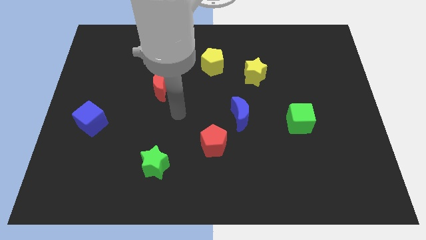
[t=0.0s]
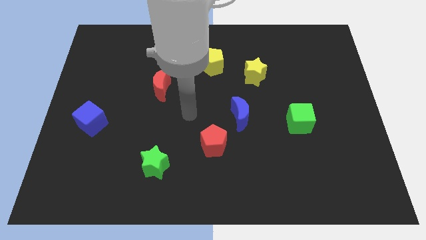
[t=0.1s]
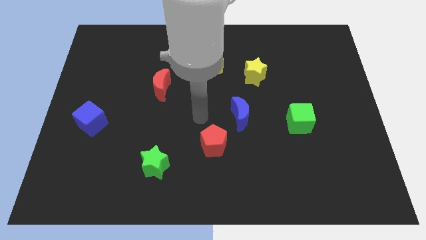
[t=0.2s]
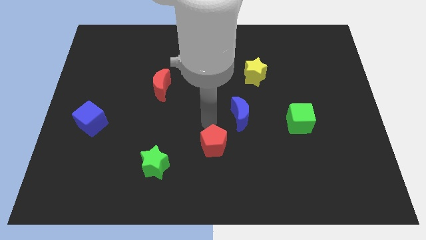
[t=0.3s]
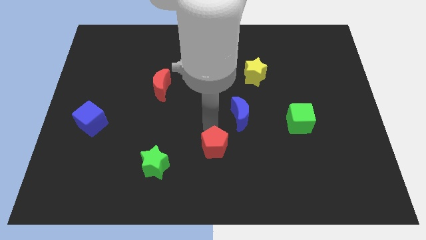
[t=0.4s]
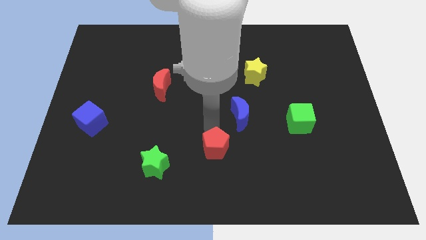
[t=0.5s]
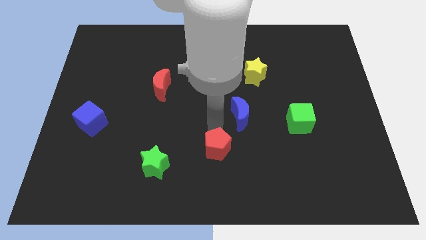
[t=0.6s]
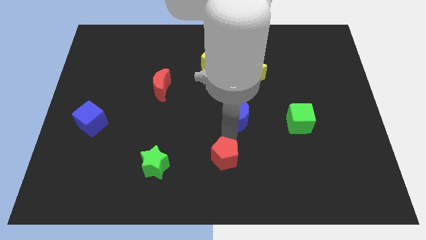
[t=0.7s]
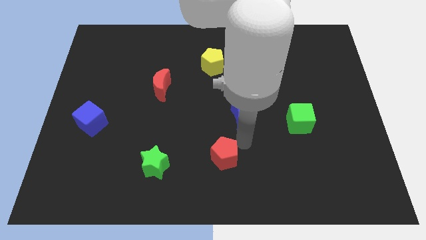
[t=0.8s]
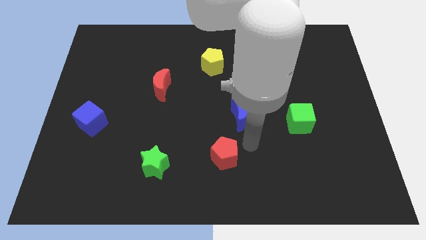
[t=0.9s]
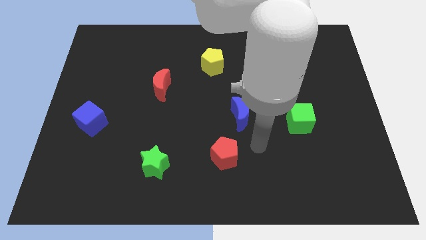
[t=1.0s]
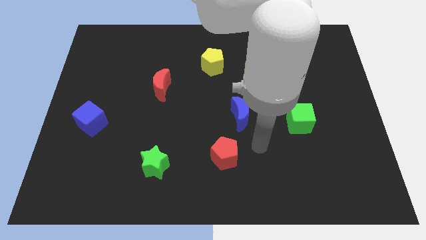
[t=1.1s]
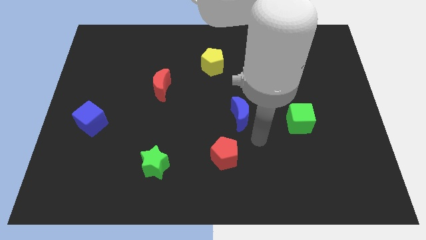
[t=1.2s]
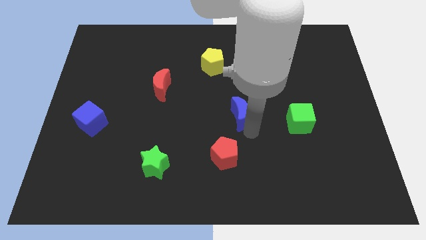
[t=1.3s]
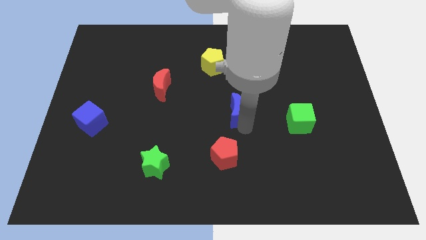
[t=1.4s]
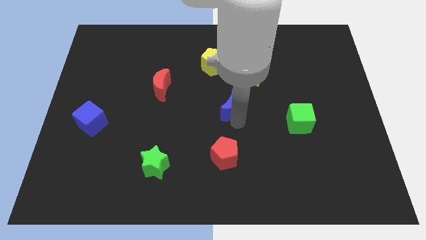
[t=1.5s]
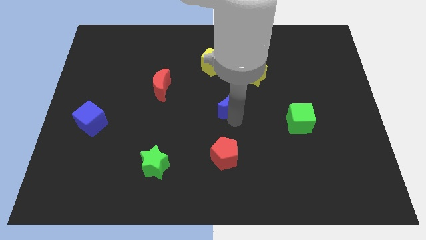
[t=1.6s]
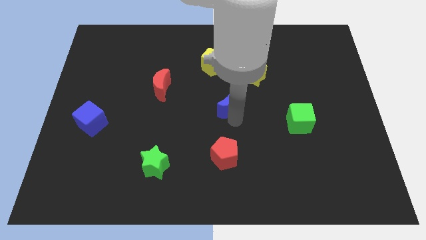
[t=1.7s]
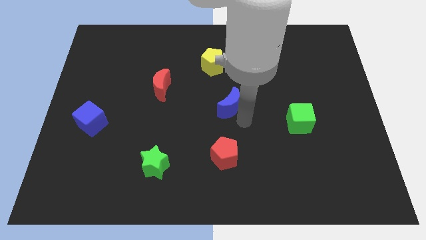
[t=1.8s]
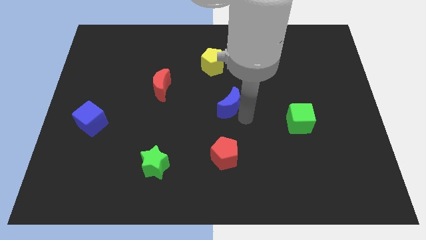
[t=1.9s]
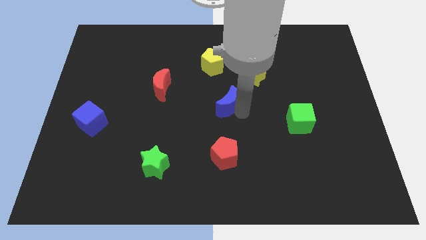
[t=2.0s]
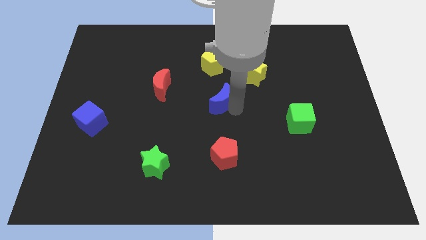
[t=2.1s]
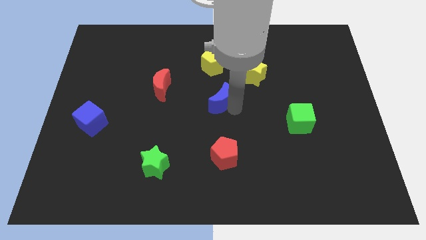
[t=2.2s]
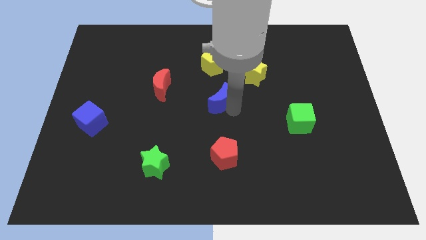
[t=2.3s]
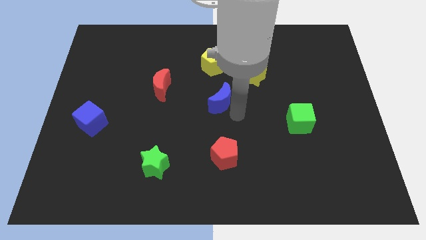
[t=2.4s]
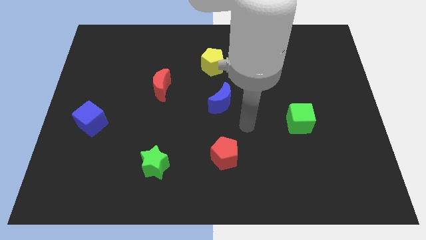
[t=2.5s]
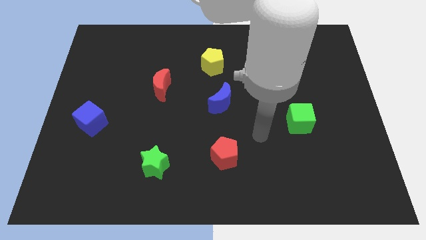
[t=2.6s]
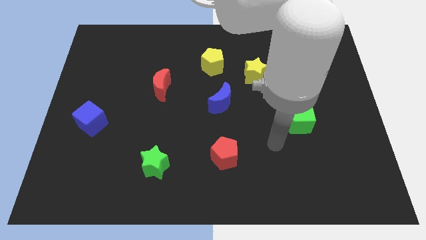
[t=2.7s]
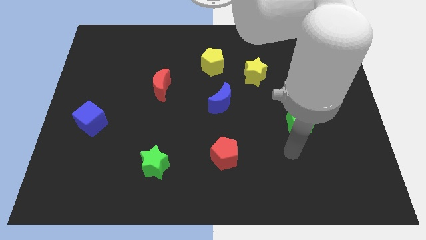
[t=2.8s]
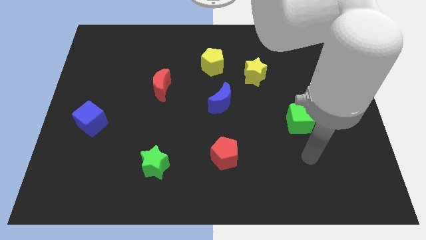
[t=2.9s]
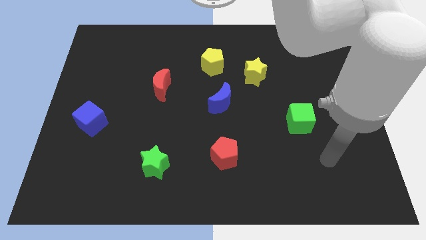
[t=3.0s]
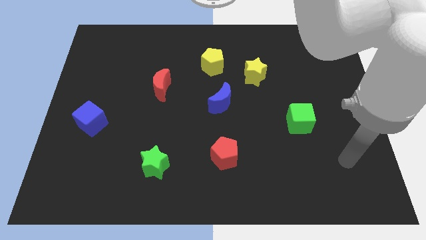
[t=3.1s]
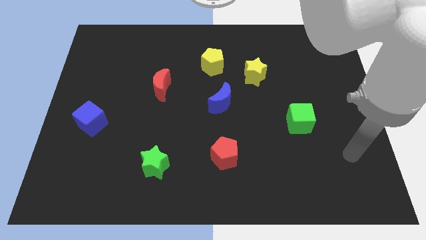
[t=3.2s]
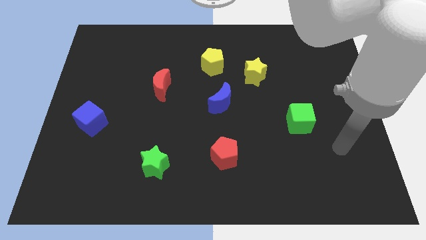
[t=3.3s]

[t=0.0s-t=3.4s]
place the blue crescent diagonally in between both the pentagons

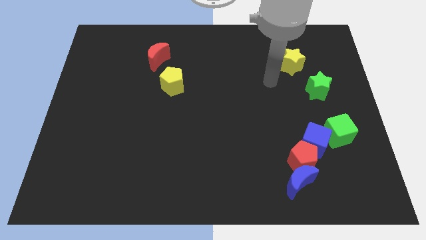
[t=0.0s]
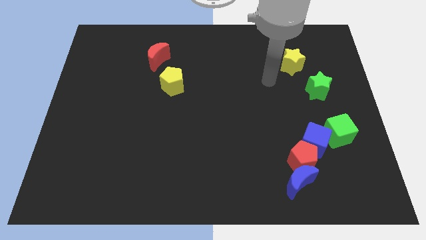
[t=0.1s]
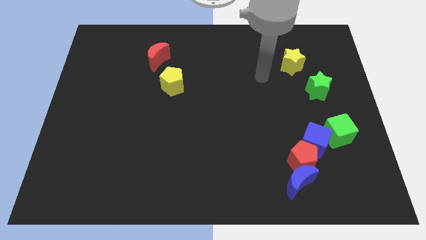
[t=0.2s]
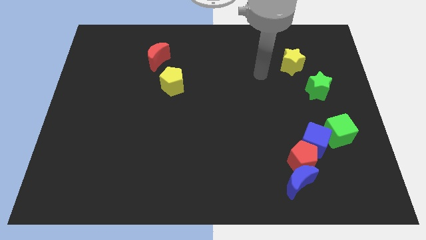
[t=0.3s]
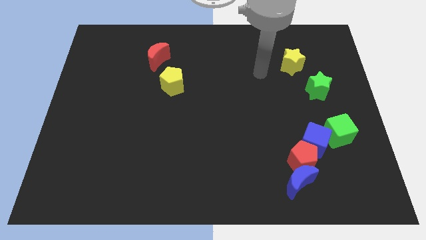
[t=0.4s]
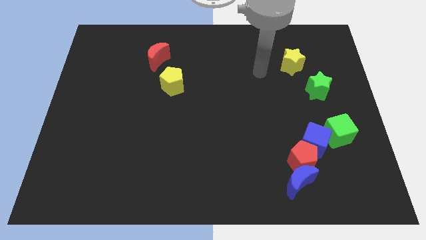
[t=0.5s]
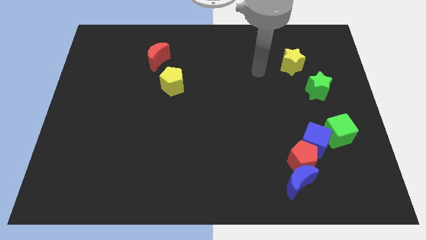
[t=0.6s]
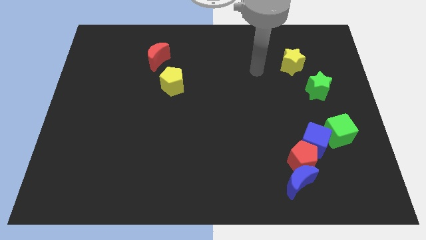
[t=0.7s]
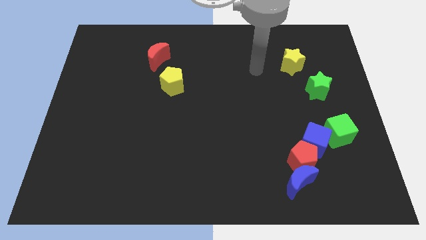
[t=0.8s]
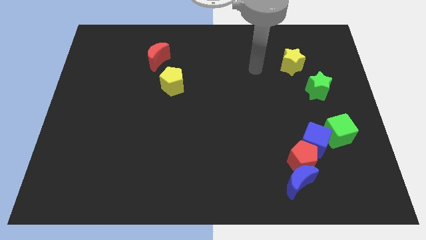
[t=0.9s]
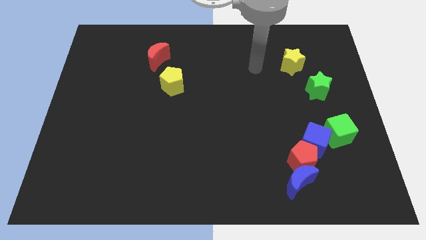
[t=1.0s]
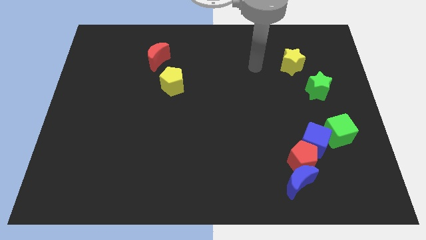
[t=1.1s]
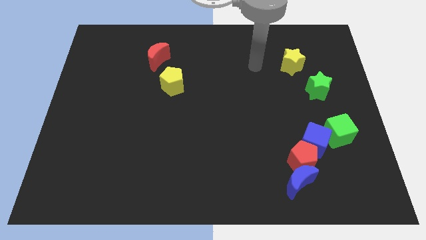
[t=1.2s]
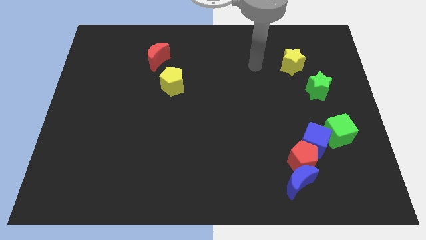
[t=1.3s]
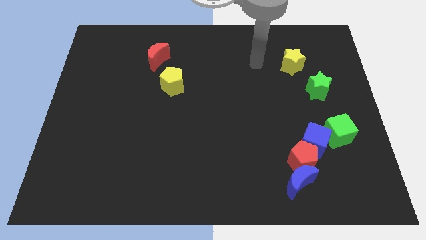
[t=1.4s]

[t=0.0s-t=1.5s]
move your arm towards the top side of the board

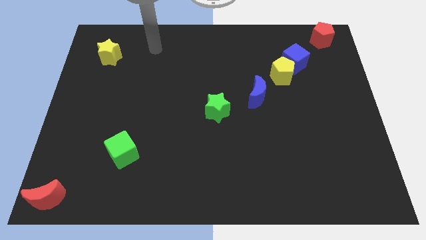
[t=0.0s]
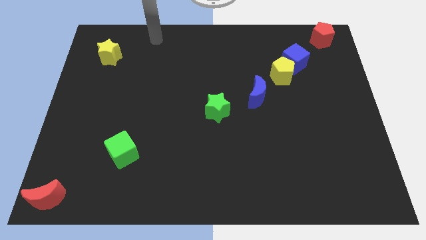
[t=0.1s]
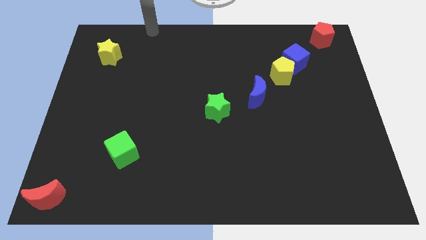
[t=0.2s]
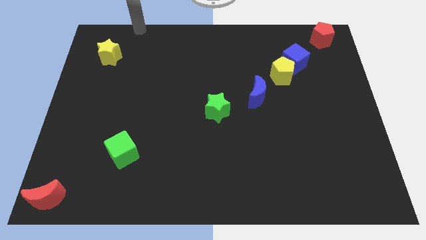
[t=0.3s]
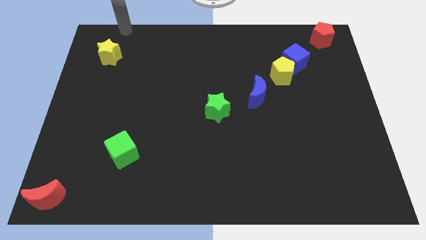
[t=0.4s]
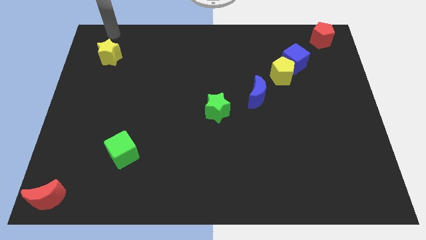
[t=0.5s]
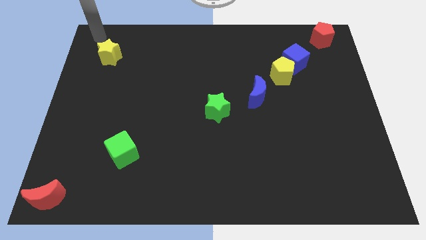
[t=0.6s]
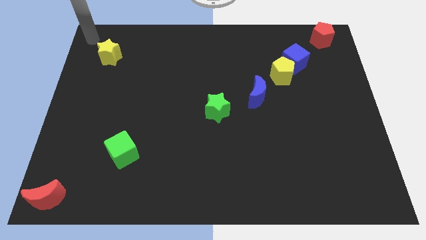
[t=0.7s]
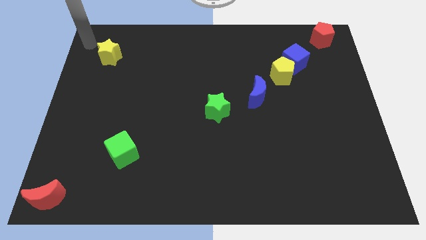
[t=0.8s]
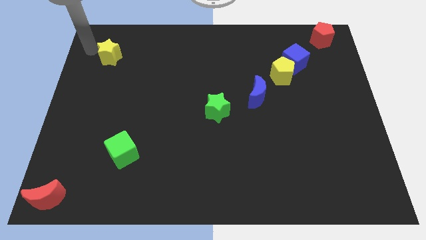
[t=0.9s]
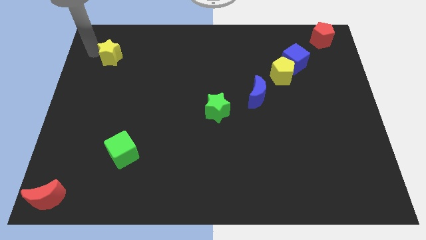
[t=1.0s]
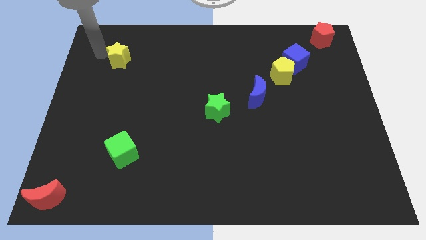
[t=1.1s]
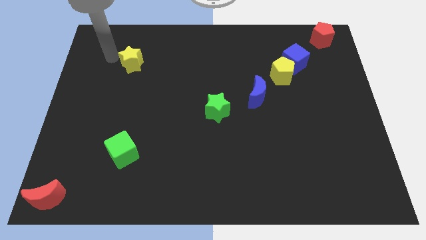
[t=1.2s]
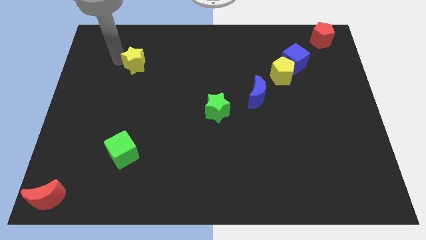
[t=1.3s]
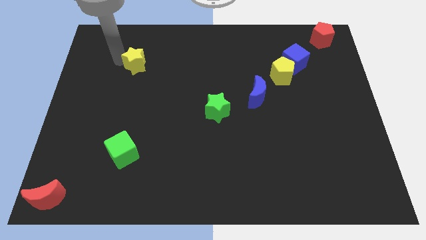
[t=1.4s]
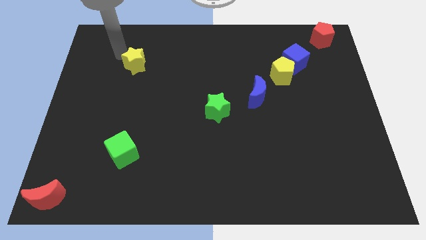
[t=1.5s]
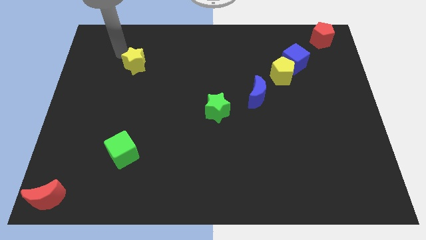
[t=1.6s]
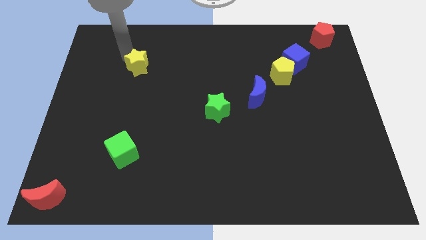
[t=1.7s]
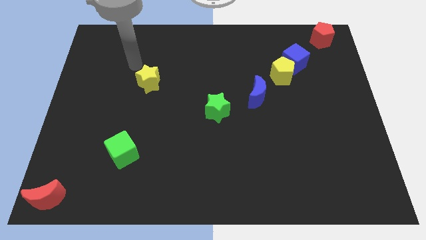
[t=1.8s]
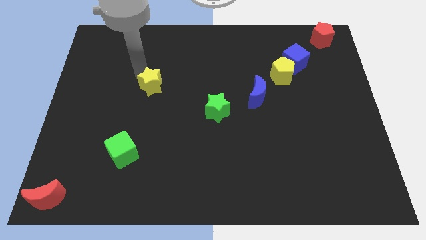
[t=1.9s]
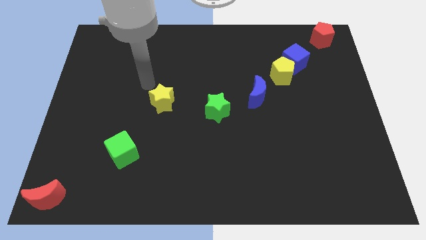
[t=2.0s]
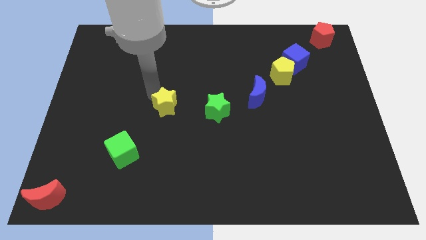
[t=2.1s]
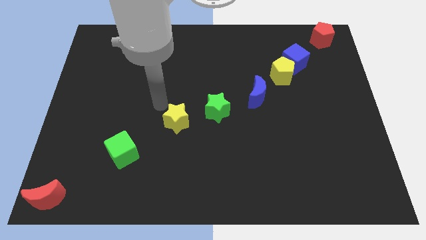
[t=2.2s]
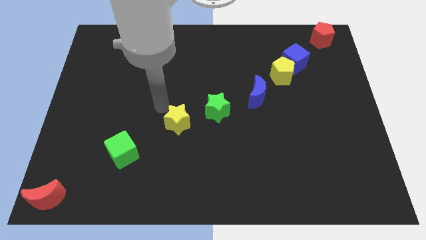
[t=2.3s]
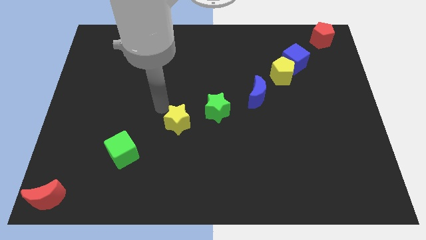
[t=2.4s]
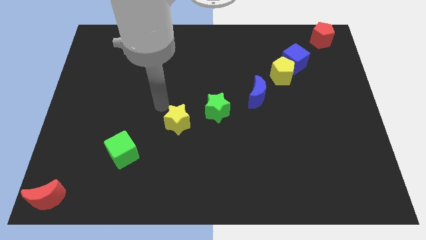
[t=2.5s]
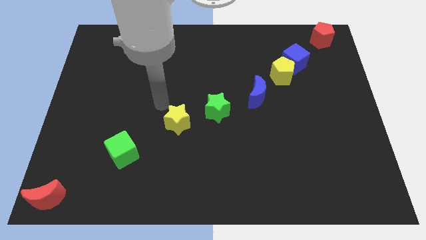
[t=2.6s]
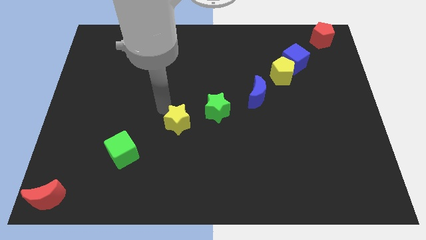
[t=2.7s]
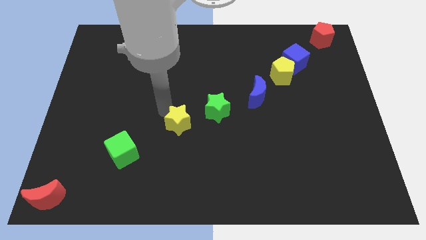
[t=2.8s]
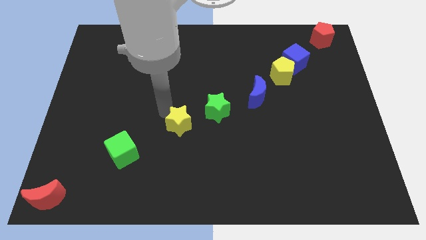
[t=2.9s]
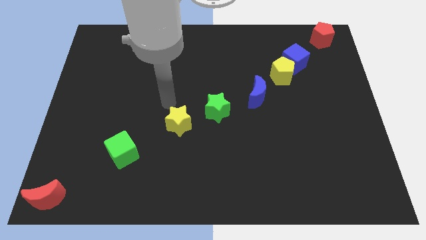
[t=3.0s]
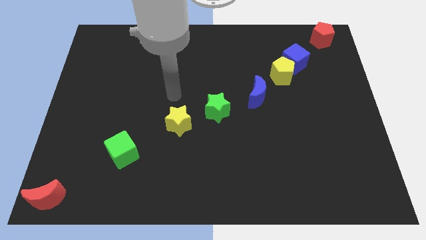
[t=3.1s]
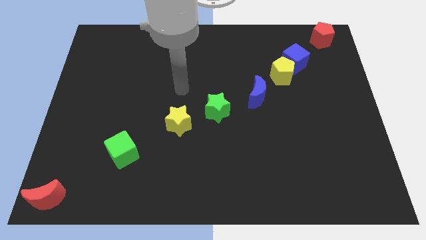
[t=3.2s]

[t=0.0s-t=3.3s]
move the yellow star left side of the green star

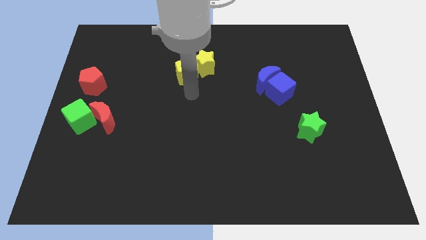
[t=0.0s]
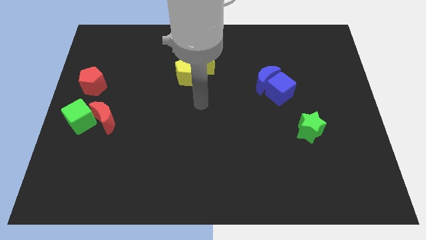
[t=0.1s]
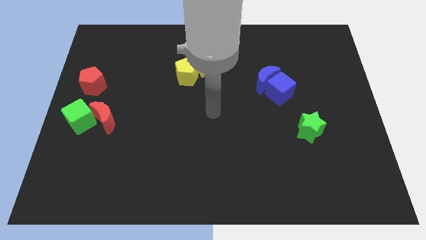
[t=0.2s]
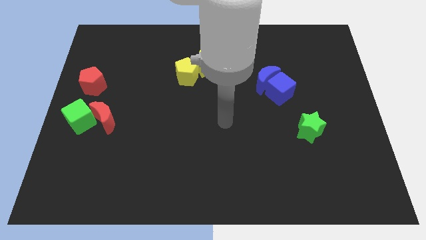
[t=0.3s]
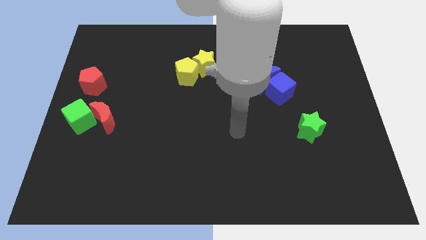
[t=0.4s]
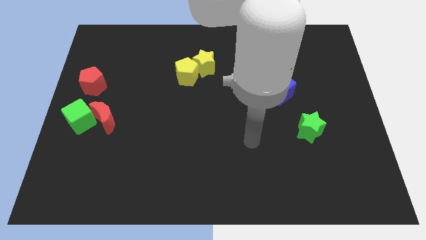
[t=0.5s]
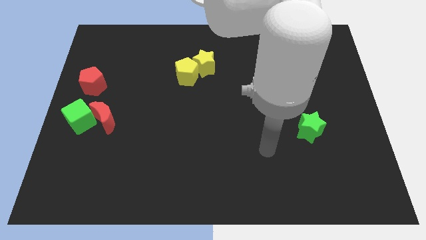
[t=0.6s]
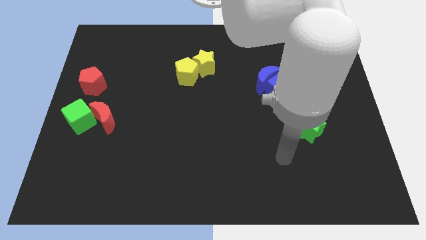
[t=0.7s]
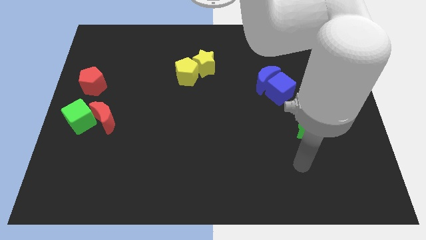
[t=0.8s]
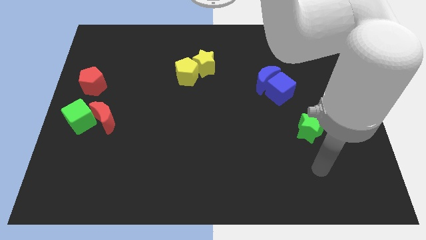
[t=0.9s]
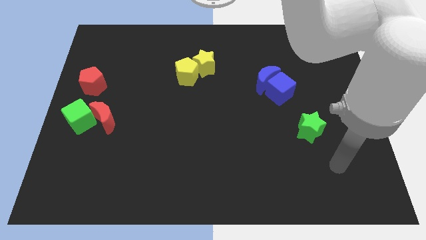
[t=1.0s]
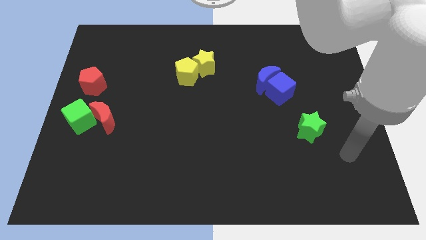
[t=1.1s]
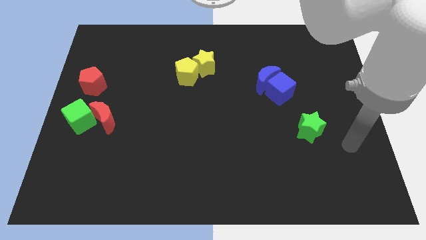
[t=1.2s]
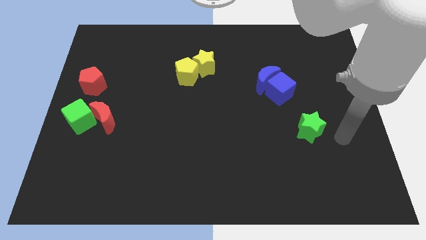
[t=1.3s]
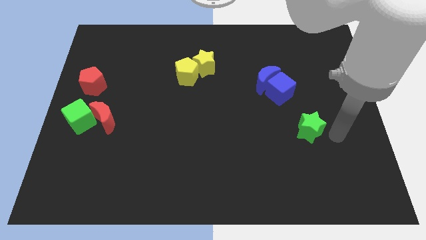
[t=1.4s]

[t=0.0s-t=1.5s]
point your arm at the right of the green star
